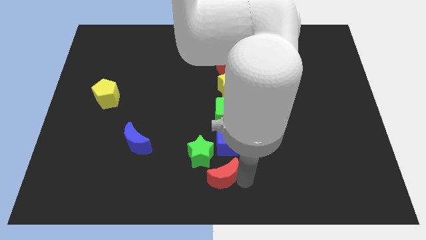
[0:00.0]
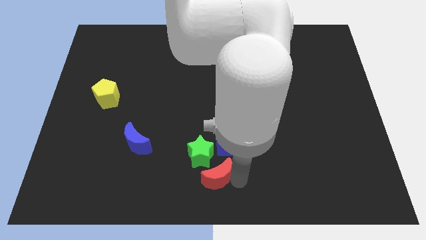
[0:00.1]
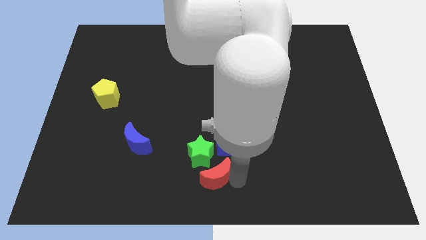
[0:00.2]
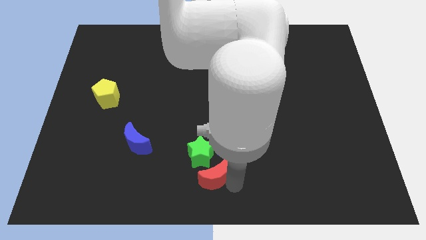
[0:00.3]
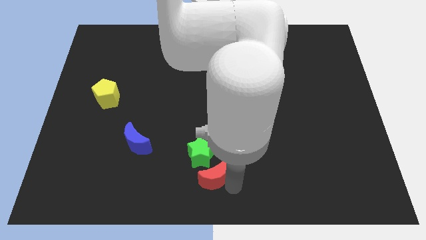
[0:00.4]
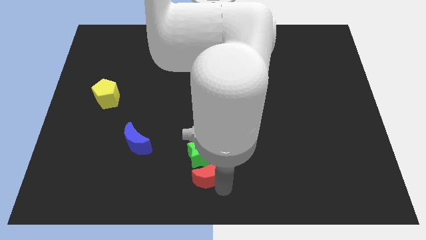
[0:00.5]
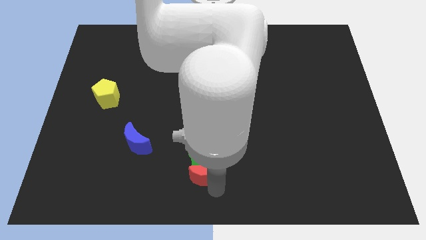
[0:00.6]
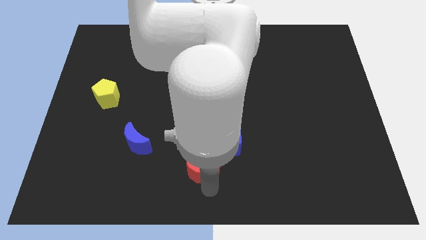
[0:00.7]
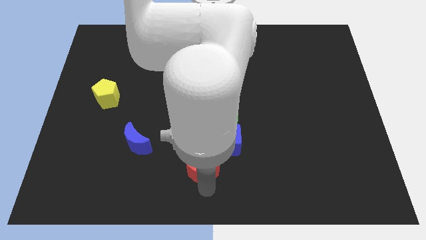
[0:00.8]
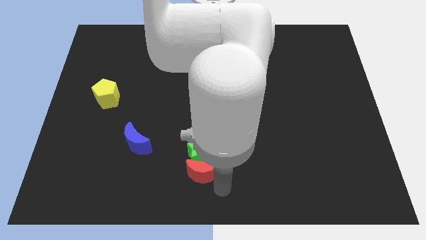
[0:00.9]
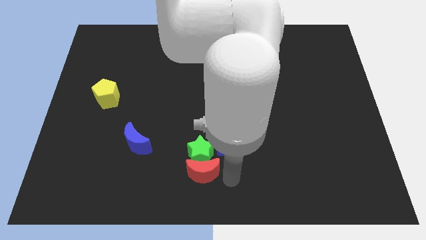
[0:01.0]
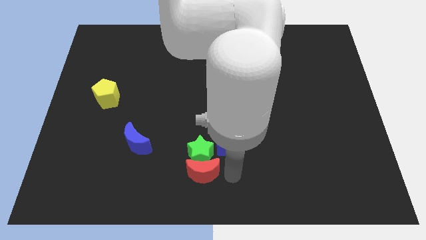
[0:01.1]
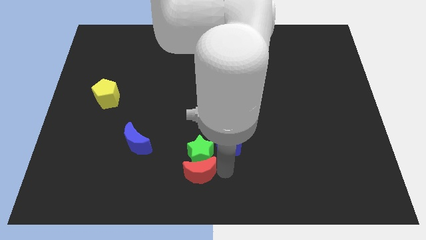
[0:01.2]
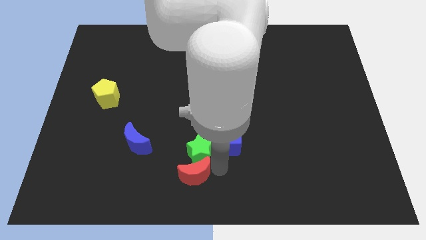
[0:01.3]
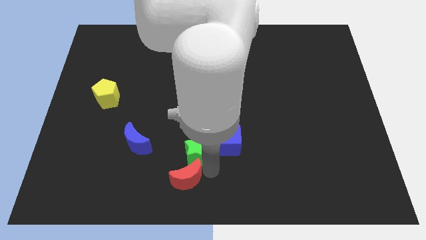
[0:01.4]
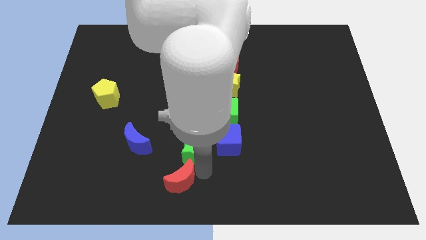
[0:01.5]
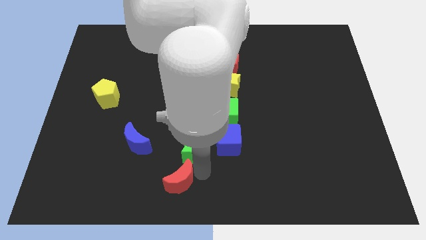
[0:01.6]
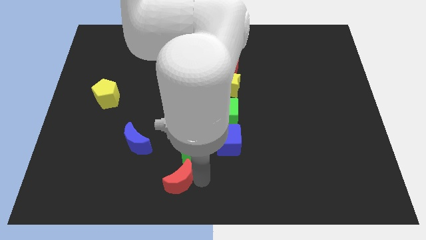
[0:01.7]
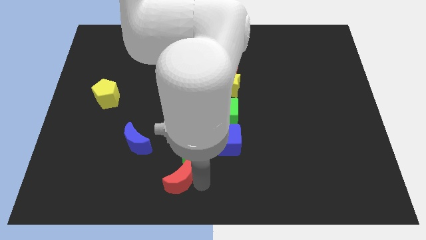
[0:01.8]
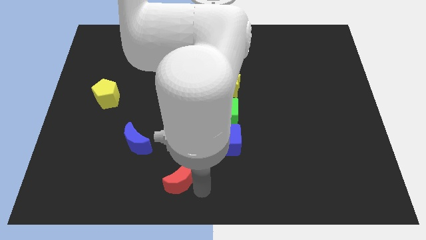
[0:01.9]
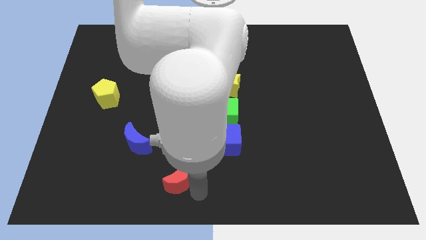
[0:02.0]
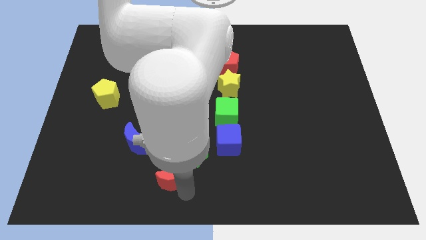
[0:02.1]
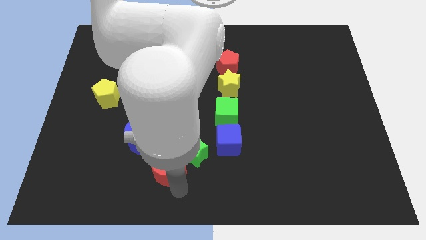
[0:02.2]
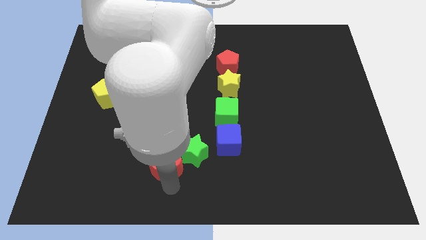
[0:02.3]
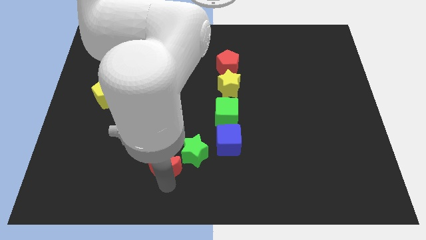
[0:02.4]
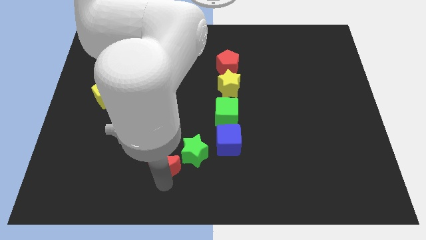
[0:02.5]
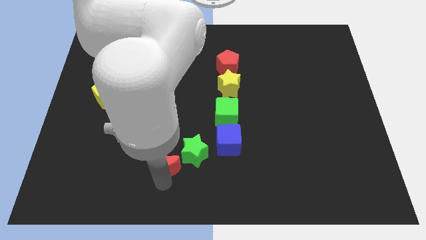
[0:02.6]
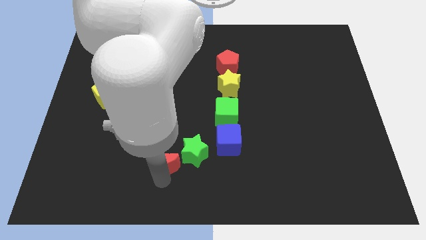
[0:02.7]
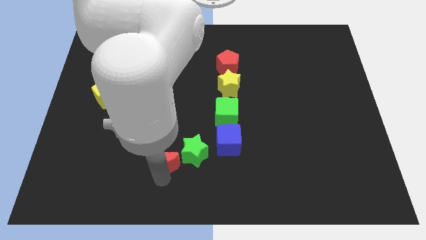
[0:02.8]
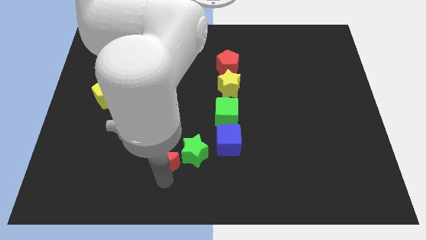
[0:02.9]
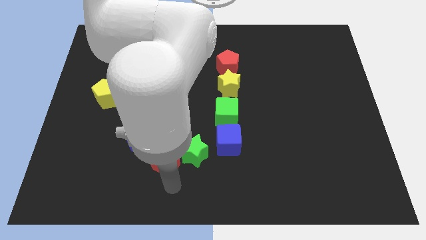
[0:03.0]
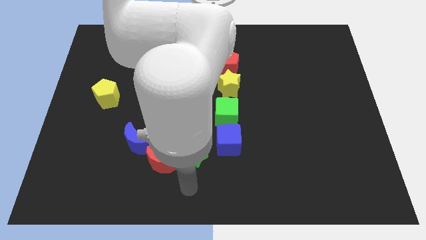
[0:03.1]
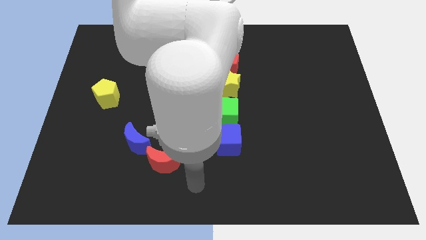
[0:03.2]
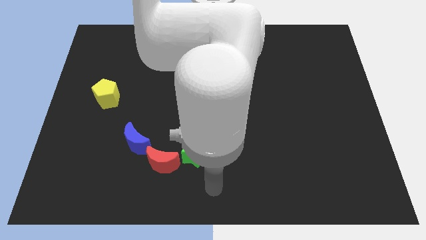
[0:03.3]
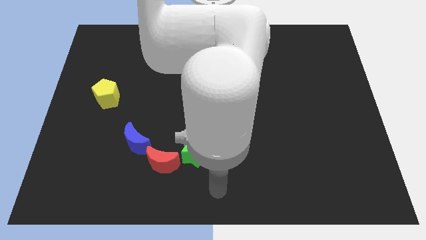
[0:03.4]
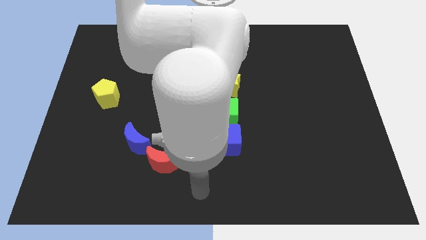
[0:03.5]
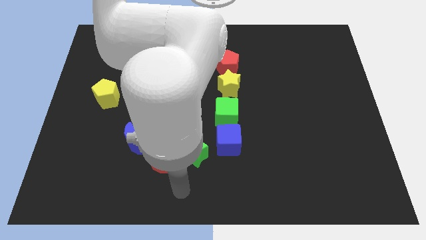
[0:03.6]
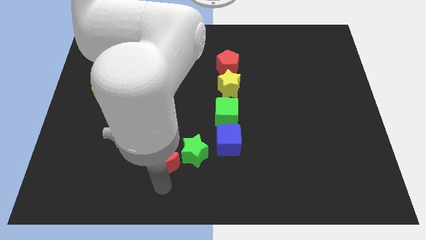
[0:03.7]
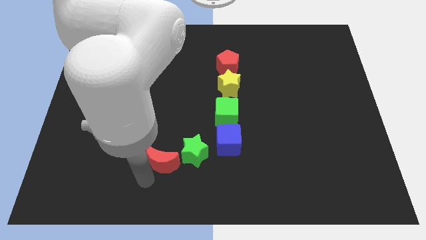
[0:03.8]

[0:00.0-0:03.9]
place red crescent beside blue crescent

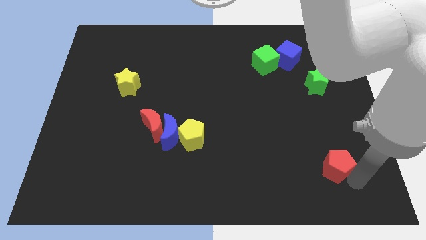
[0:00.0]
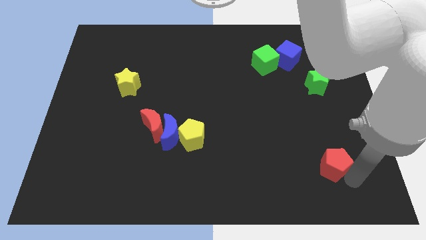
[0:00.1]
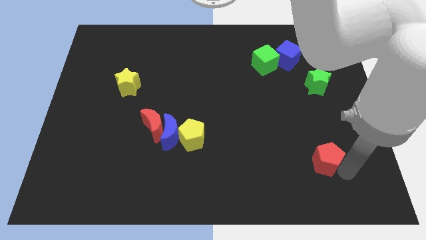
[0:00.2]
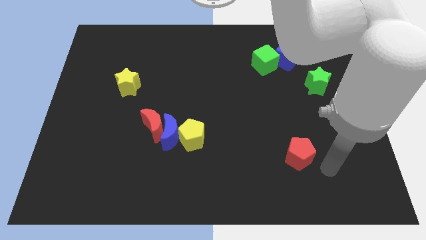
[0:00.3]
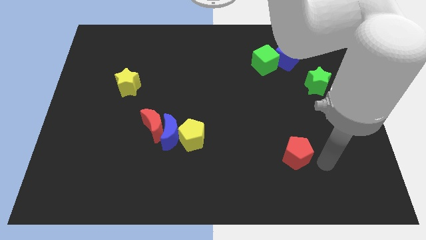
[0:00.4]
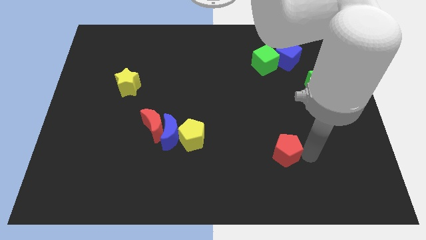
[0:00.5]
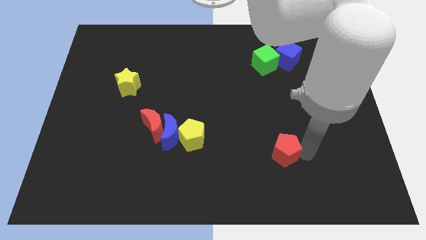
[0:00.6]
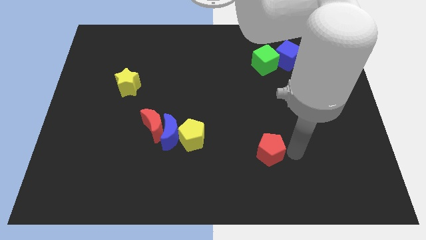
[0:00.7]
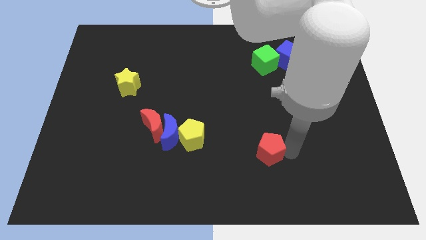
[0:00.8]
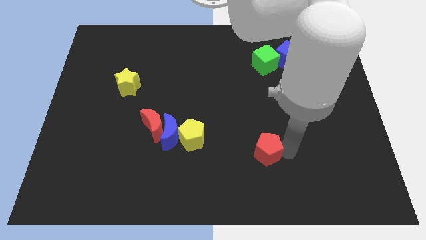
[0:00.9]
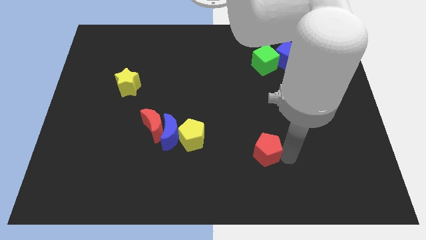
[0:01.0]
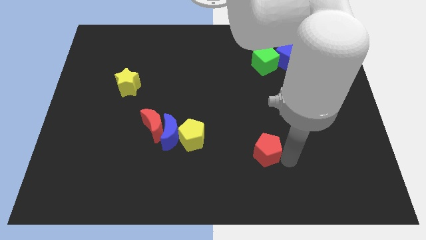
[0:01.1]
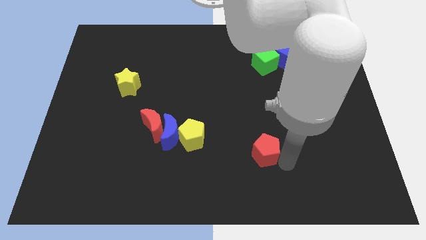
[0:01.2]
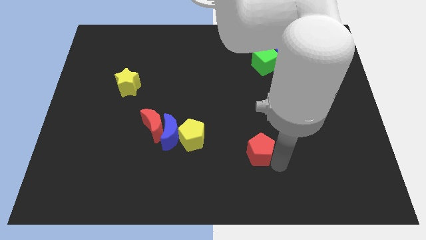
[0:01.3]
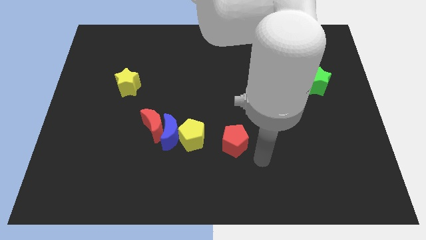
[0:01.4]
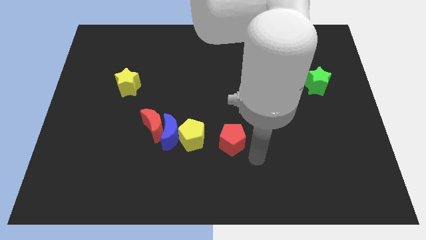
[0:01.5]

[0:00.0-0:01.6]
place red pentagon to the right of yellow pentagon

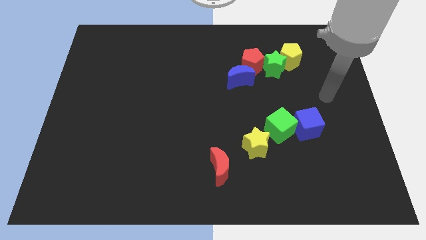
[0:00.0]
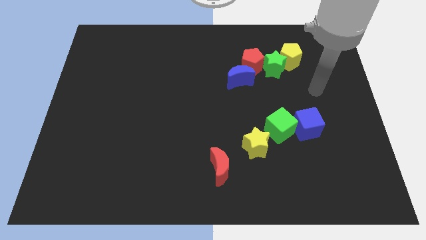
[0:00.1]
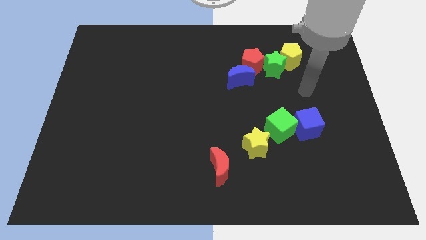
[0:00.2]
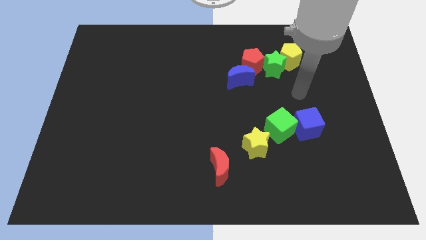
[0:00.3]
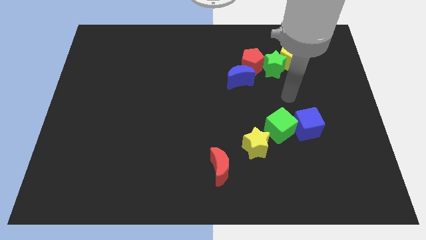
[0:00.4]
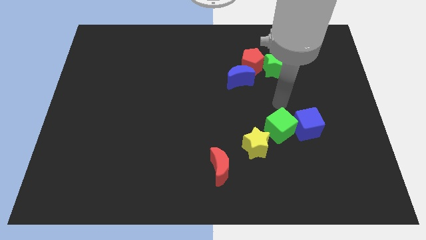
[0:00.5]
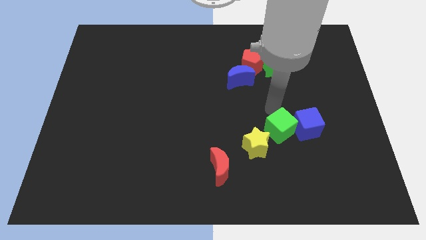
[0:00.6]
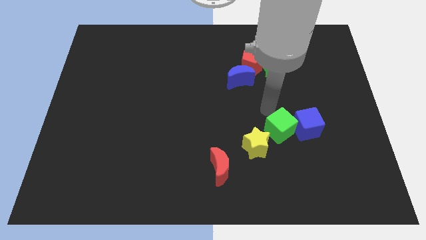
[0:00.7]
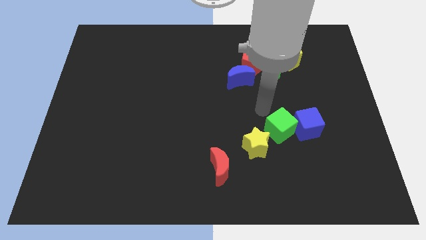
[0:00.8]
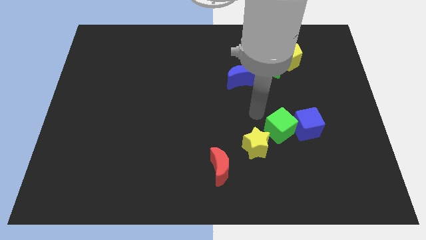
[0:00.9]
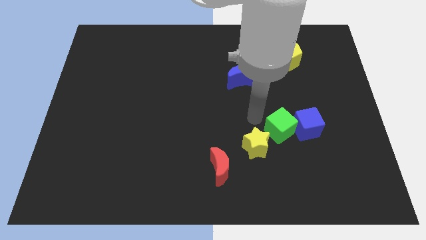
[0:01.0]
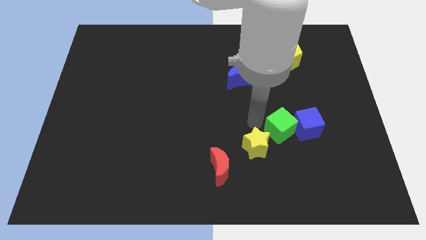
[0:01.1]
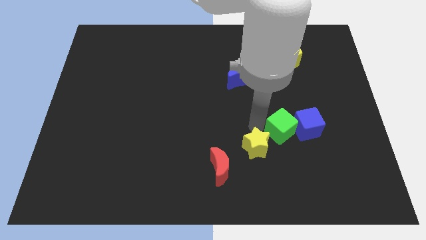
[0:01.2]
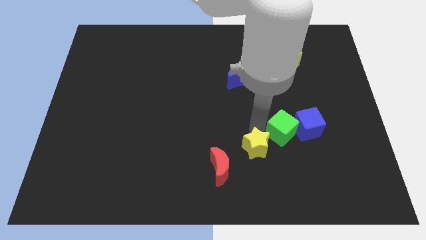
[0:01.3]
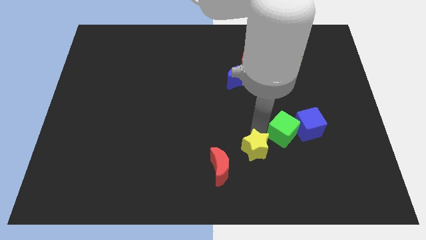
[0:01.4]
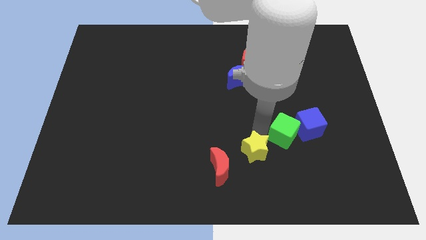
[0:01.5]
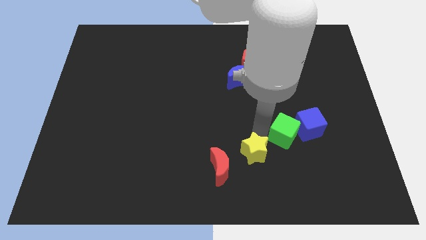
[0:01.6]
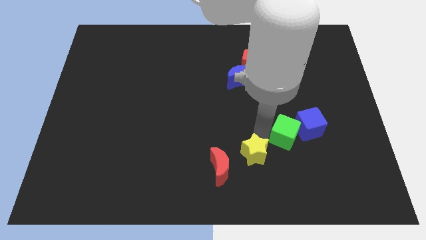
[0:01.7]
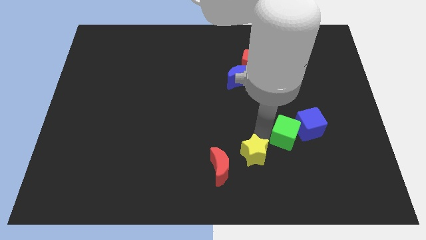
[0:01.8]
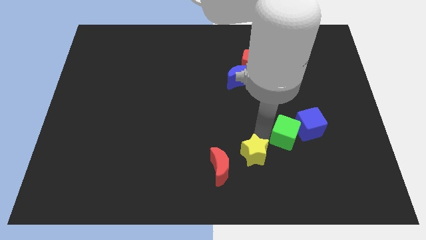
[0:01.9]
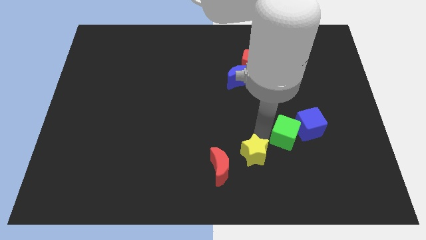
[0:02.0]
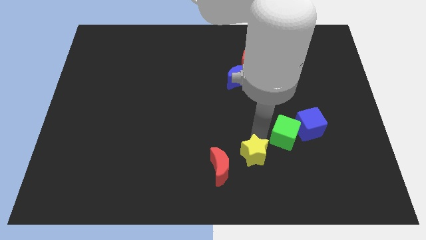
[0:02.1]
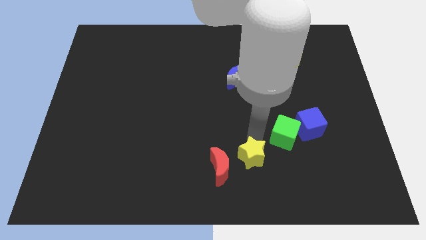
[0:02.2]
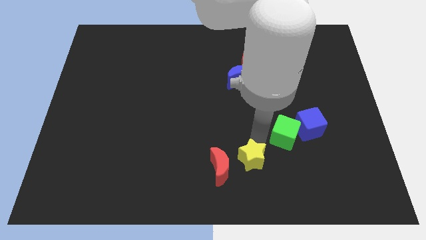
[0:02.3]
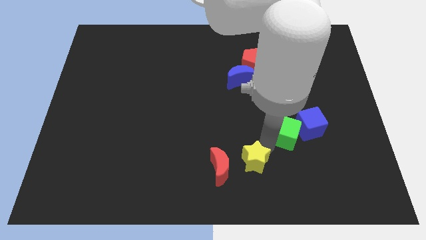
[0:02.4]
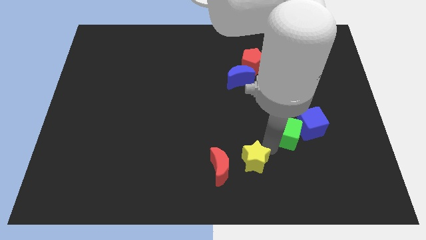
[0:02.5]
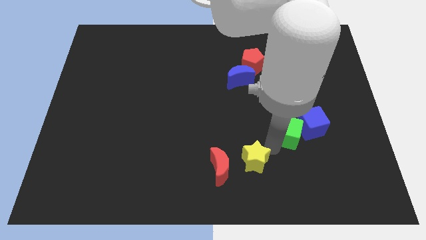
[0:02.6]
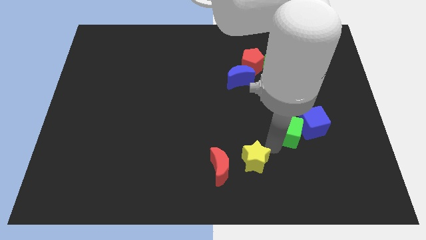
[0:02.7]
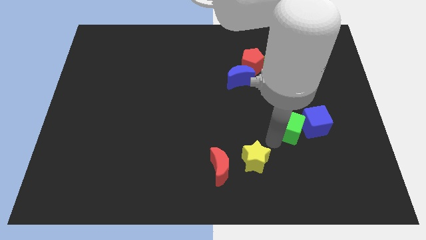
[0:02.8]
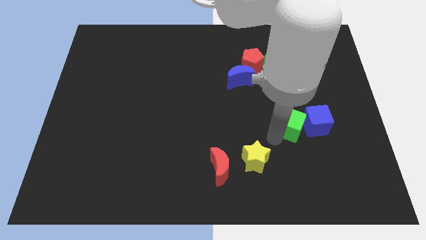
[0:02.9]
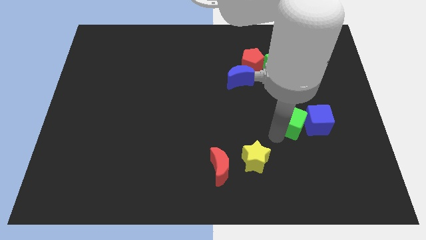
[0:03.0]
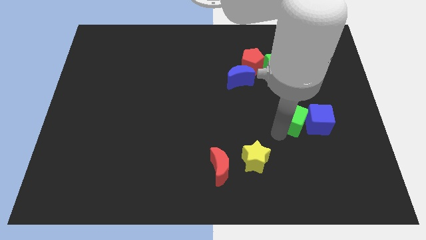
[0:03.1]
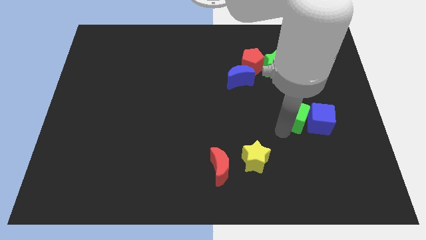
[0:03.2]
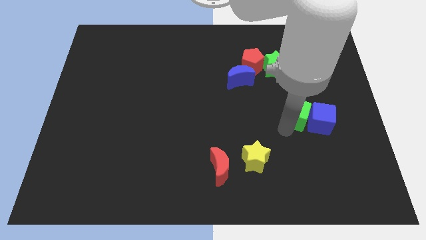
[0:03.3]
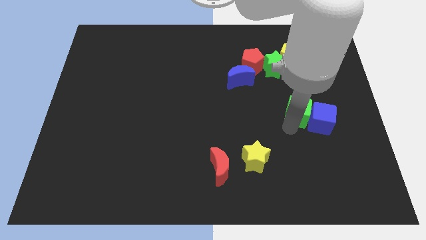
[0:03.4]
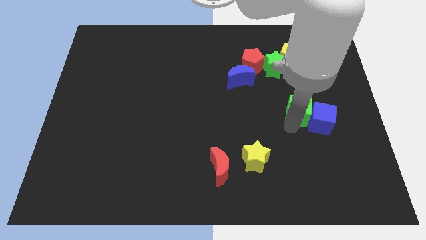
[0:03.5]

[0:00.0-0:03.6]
move the green cube and blue cube away from the right side of the yellow star
